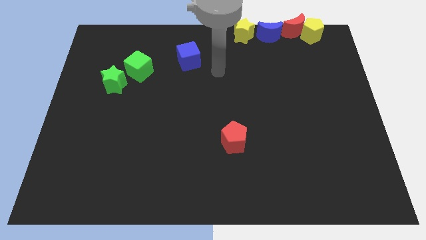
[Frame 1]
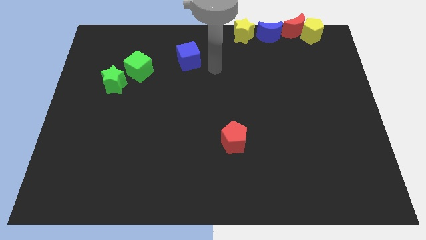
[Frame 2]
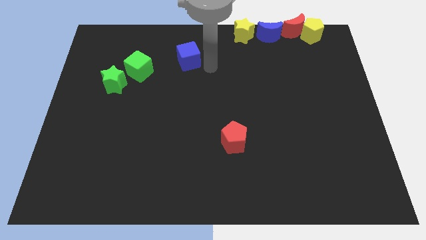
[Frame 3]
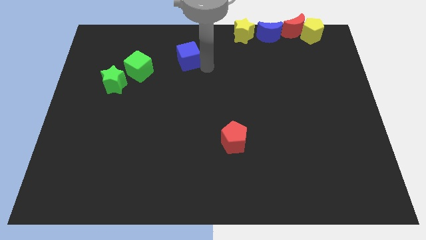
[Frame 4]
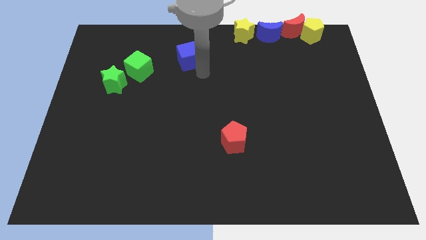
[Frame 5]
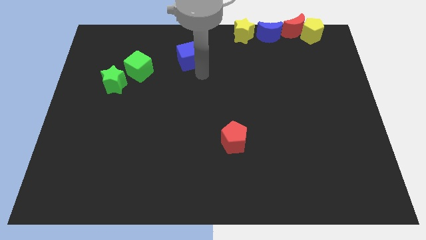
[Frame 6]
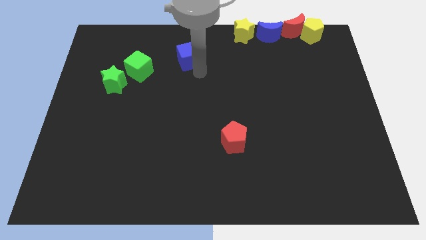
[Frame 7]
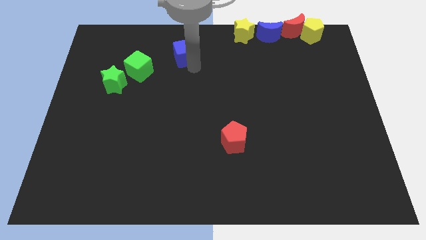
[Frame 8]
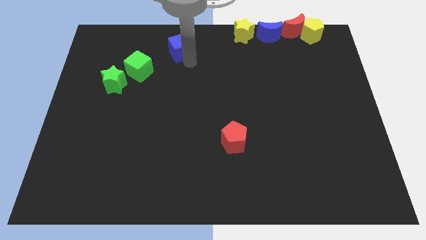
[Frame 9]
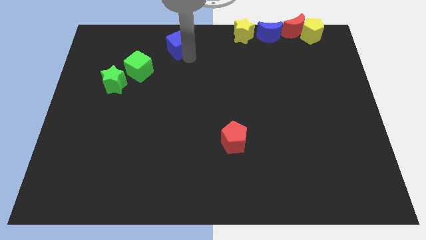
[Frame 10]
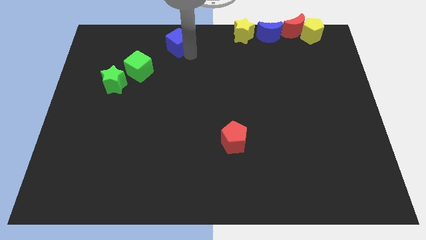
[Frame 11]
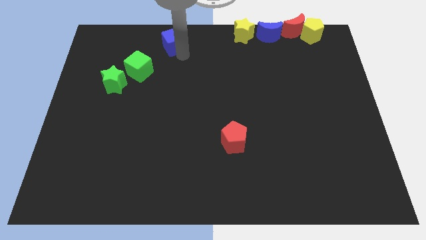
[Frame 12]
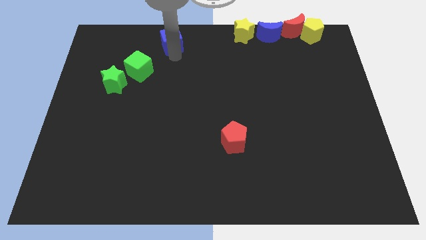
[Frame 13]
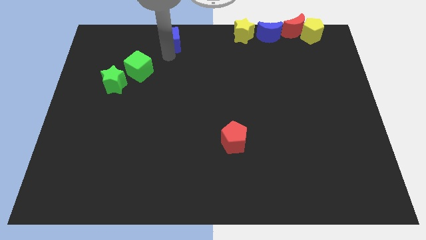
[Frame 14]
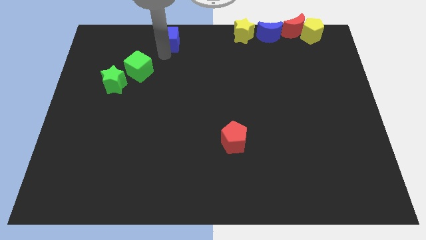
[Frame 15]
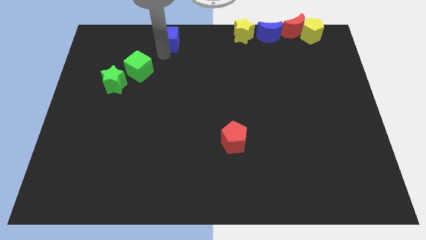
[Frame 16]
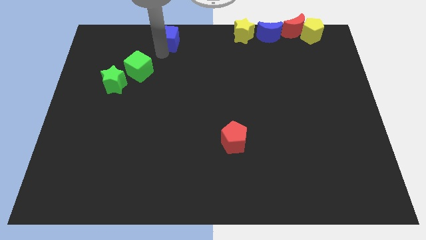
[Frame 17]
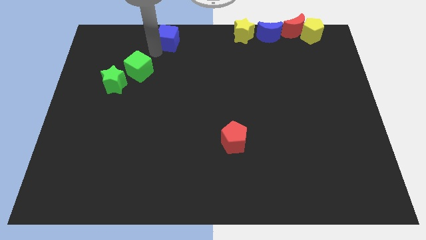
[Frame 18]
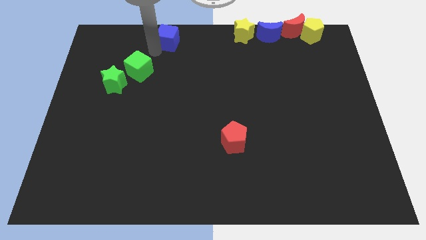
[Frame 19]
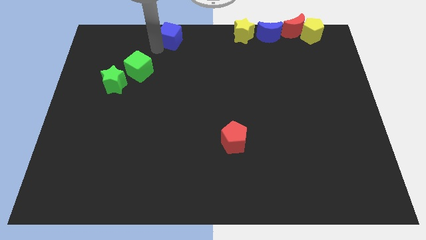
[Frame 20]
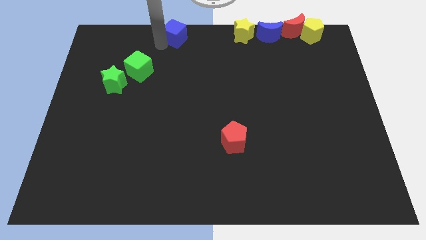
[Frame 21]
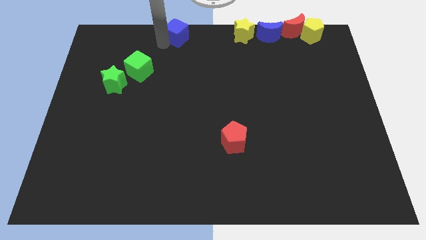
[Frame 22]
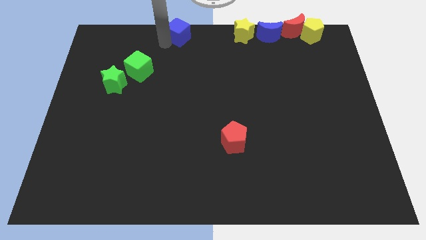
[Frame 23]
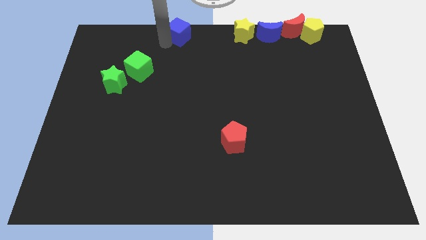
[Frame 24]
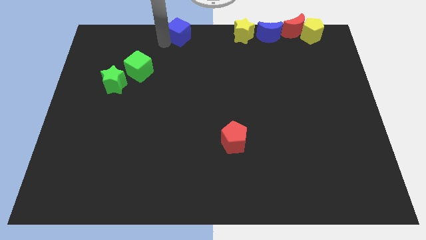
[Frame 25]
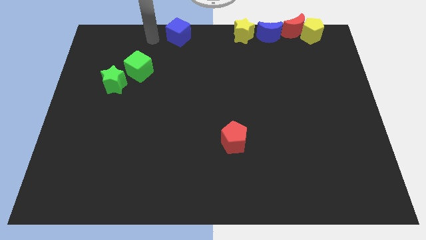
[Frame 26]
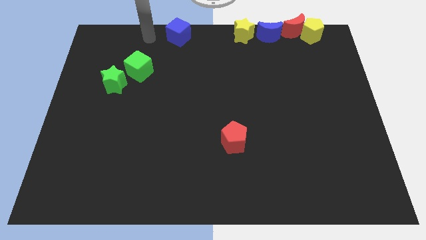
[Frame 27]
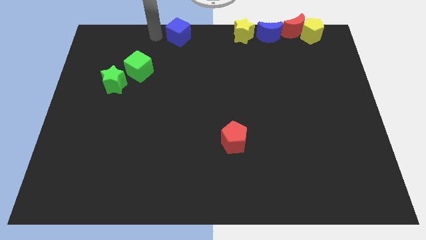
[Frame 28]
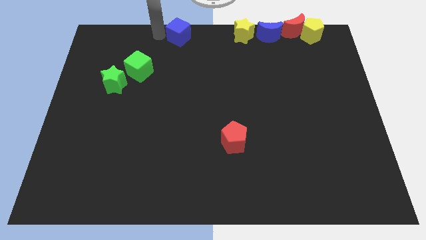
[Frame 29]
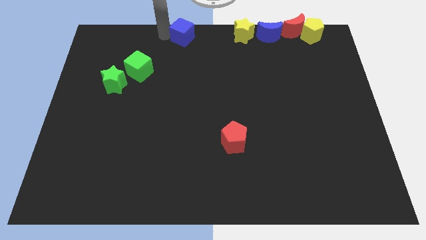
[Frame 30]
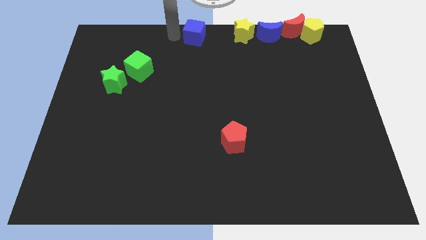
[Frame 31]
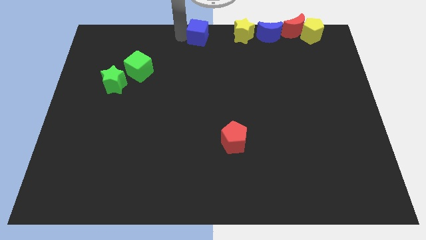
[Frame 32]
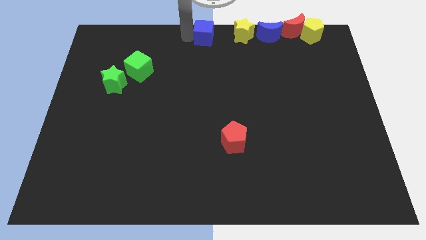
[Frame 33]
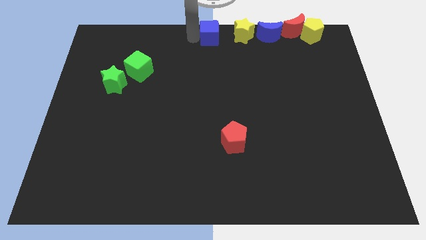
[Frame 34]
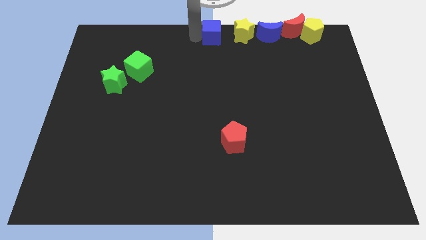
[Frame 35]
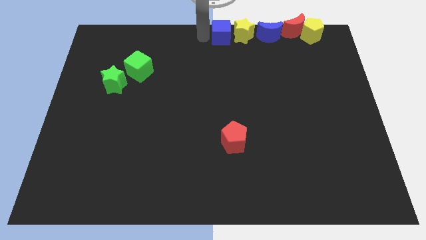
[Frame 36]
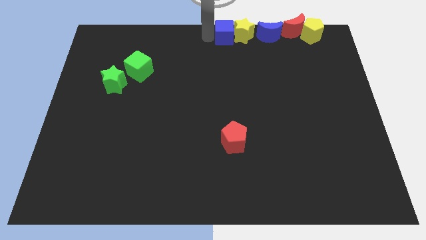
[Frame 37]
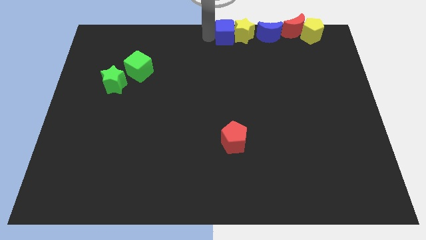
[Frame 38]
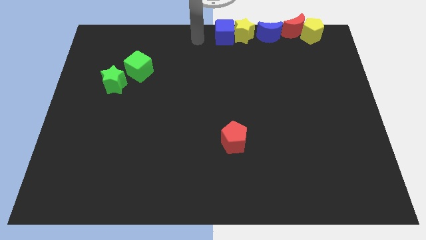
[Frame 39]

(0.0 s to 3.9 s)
move the blue cube to the left of the yellow star

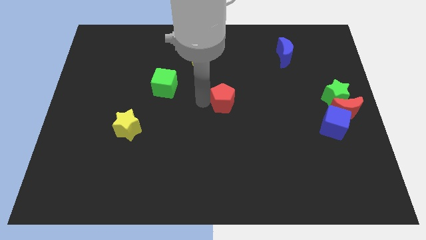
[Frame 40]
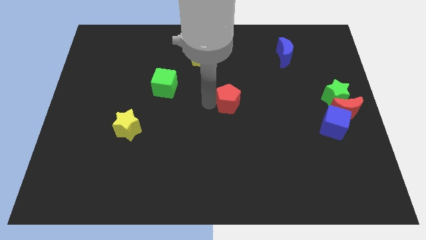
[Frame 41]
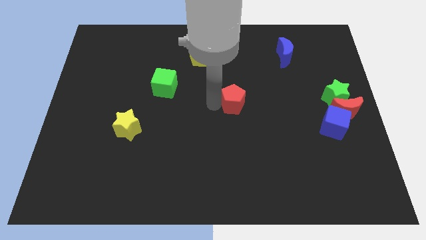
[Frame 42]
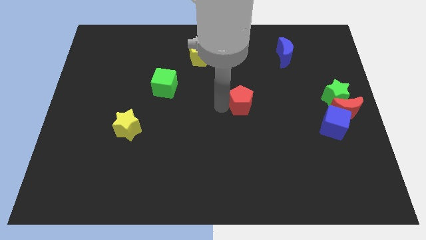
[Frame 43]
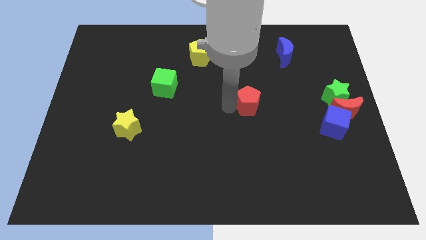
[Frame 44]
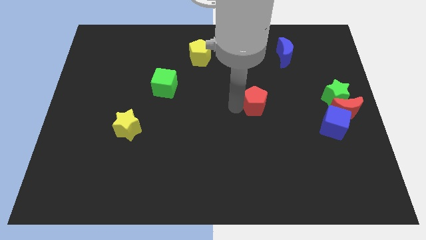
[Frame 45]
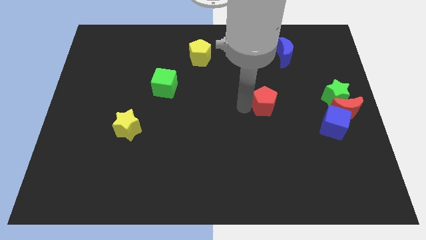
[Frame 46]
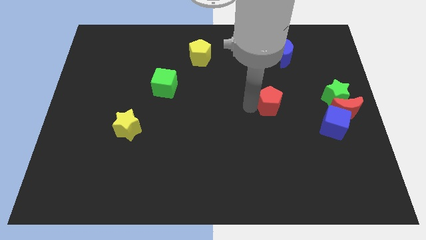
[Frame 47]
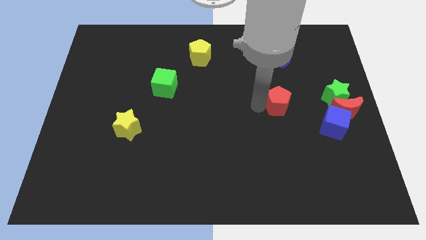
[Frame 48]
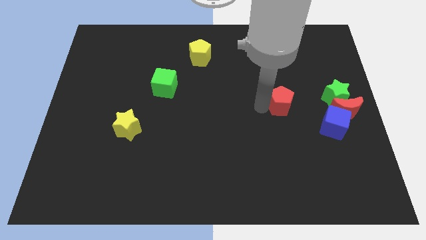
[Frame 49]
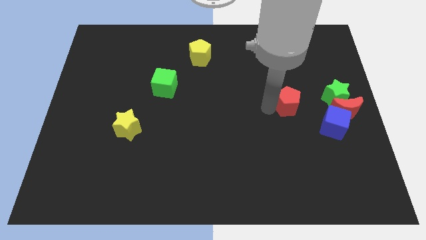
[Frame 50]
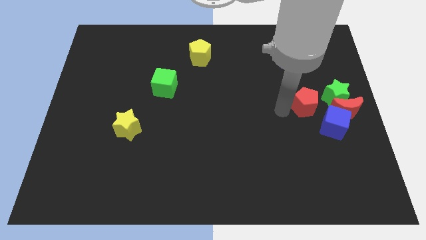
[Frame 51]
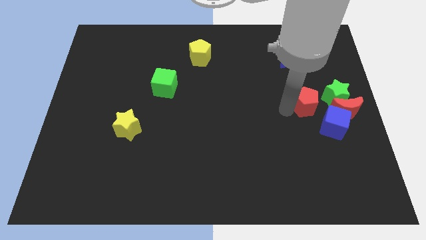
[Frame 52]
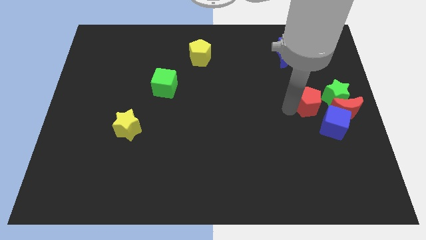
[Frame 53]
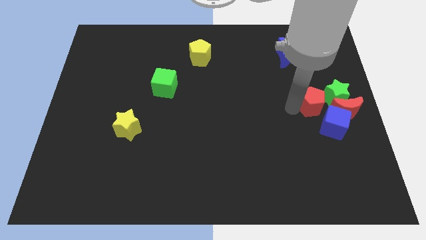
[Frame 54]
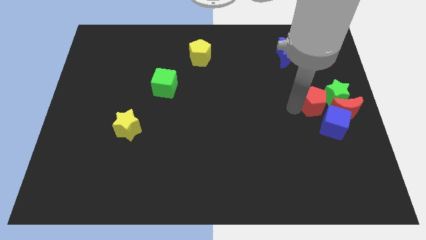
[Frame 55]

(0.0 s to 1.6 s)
move the red pentagon towards the group of blocks

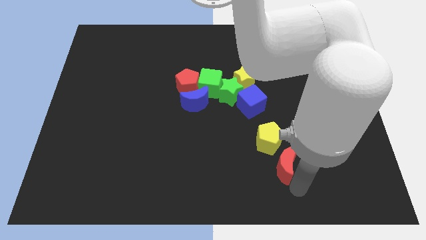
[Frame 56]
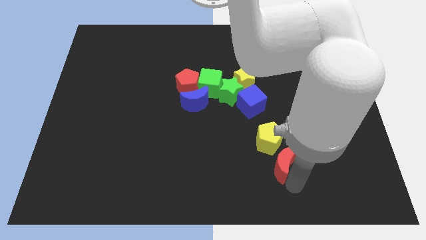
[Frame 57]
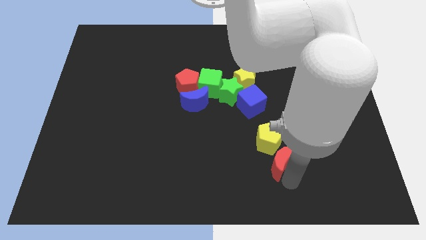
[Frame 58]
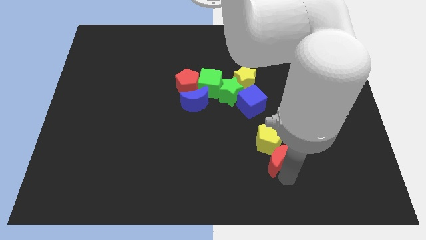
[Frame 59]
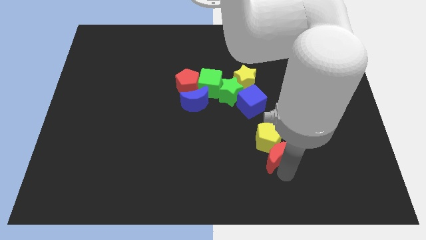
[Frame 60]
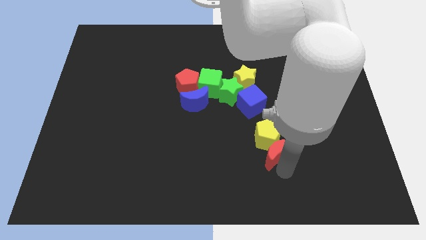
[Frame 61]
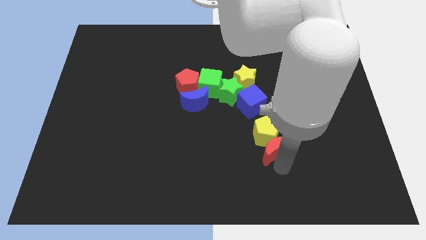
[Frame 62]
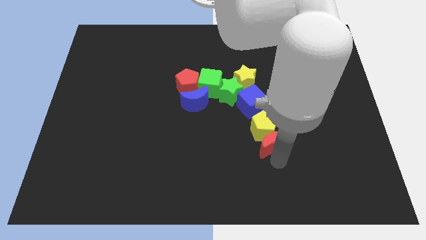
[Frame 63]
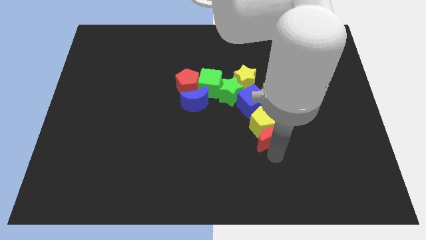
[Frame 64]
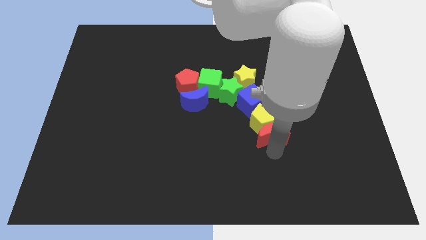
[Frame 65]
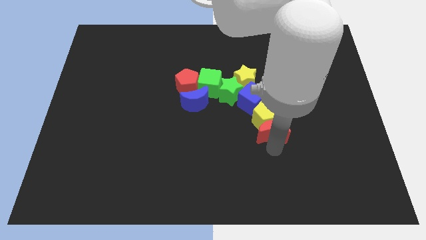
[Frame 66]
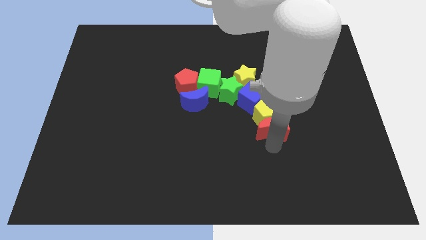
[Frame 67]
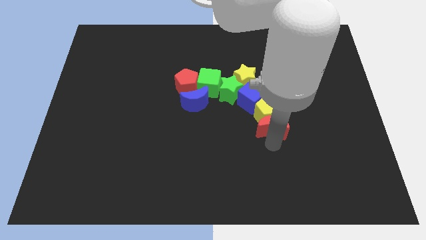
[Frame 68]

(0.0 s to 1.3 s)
move the red crescent along with the yellow pentagon into the blue cube

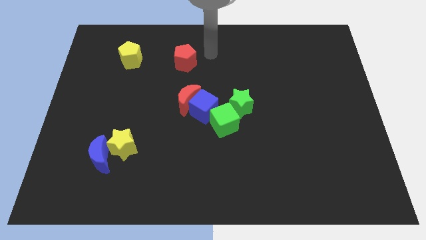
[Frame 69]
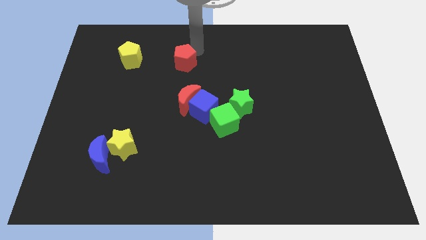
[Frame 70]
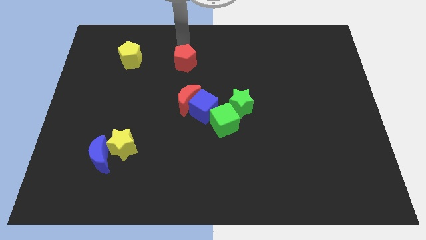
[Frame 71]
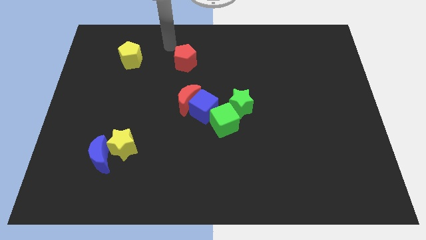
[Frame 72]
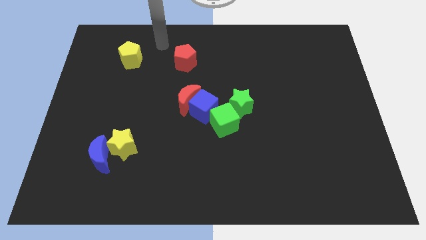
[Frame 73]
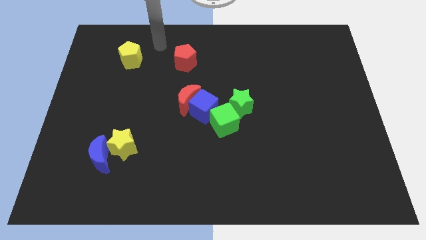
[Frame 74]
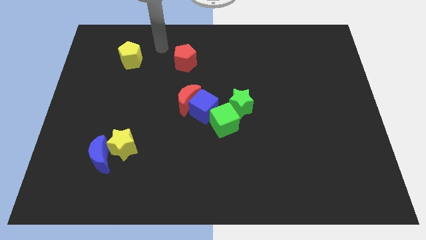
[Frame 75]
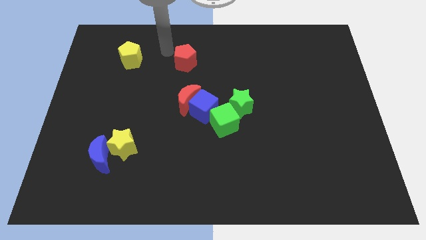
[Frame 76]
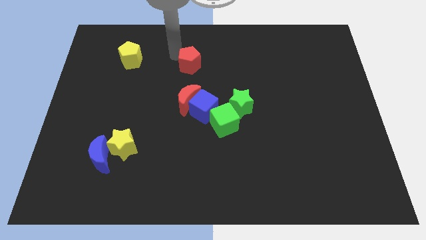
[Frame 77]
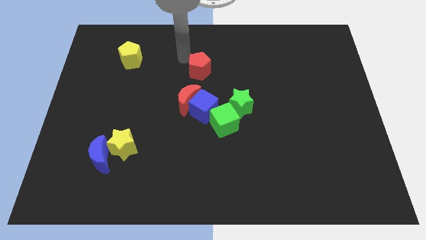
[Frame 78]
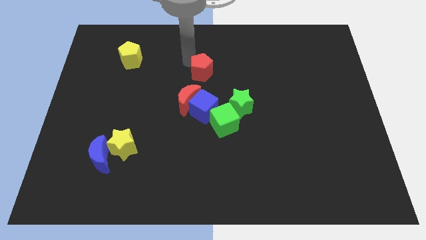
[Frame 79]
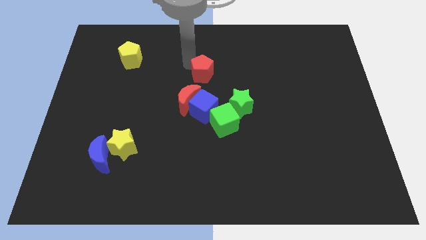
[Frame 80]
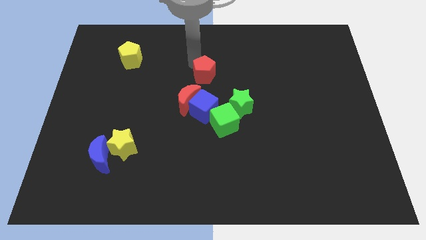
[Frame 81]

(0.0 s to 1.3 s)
drag the red pentagon vertically above the blue cube

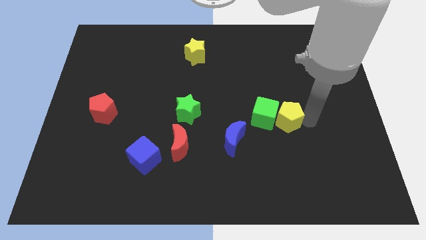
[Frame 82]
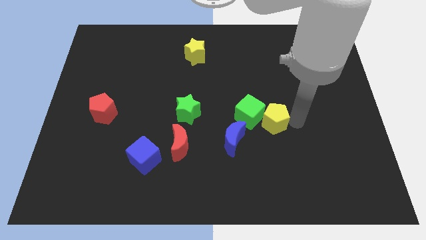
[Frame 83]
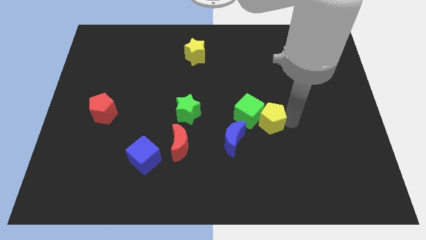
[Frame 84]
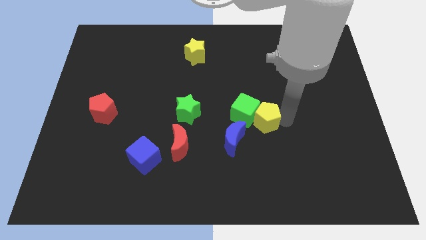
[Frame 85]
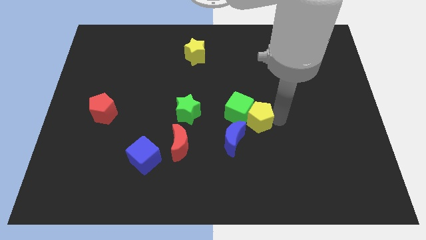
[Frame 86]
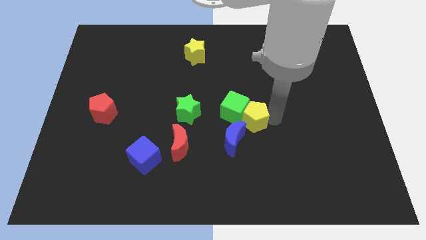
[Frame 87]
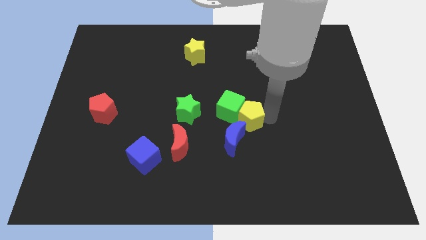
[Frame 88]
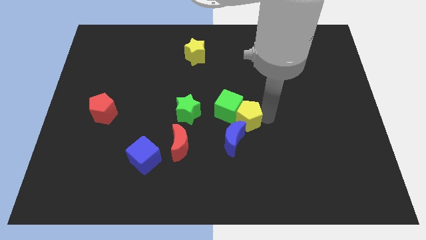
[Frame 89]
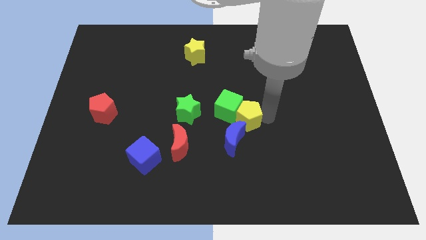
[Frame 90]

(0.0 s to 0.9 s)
move the yellow pentagon along with green cube slightly to the center of the board
